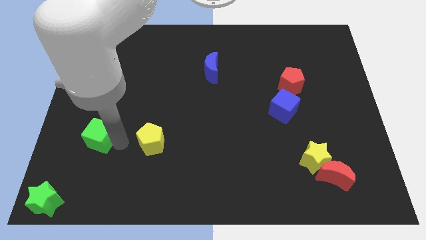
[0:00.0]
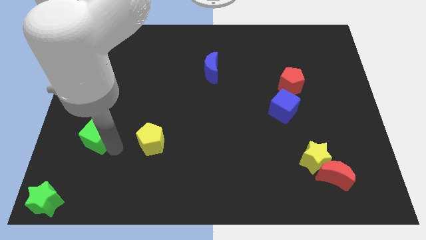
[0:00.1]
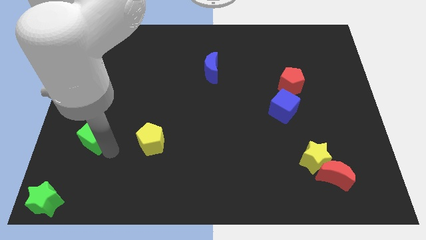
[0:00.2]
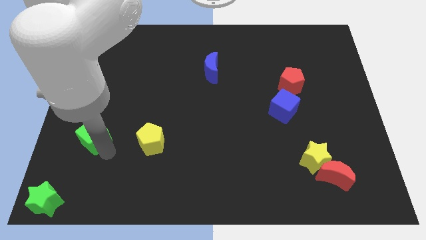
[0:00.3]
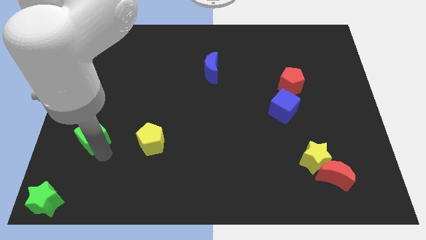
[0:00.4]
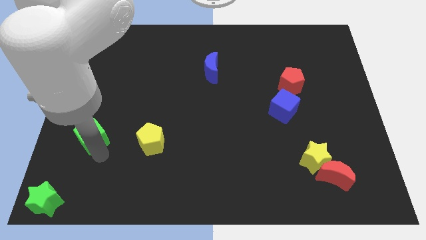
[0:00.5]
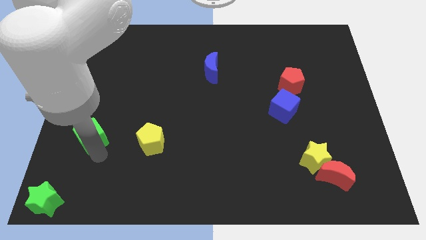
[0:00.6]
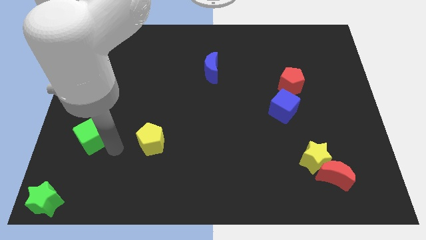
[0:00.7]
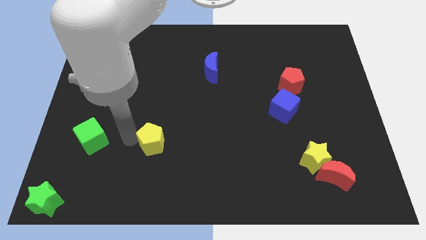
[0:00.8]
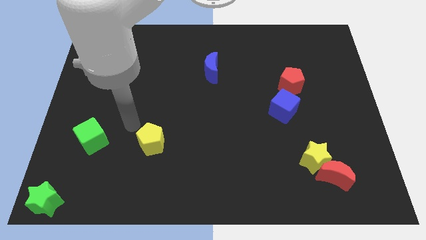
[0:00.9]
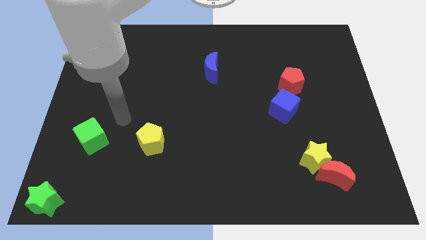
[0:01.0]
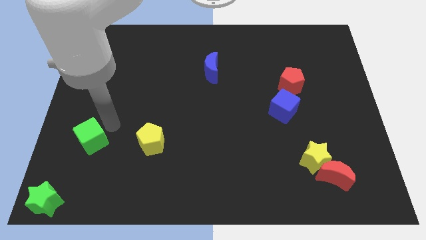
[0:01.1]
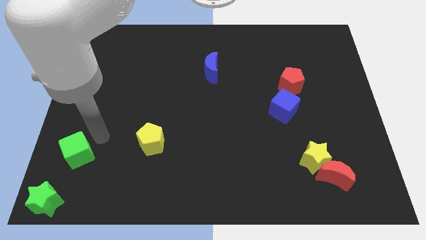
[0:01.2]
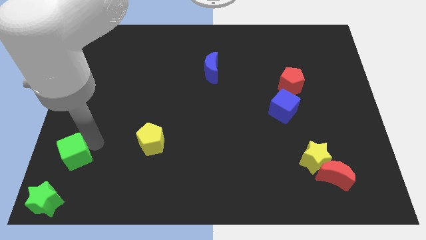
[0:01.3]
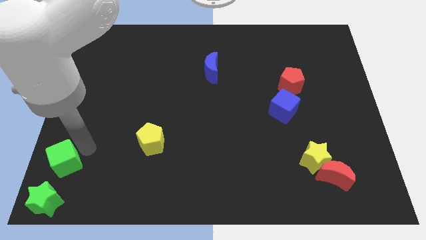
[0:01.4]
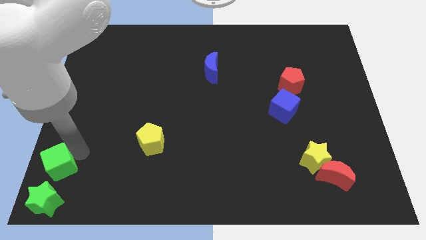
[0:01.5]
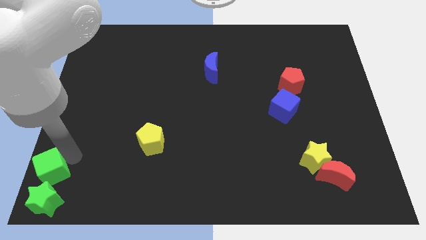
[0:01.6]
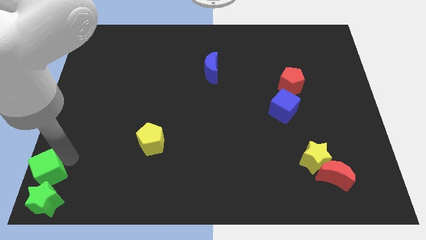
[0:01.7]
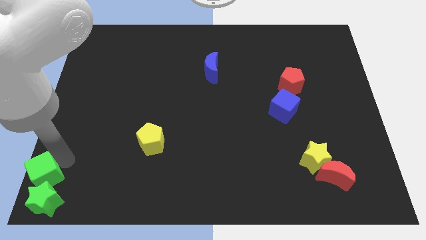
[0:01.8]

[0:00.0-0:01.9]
move the green cube towards the green star

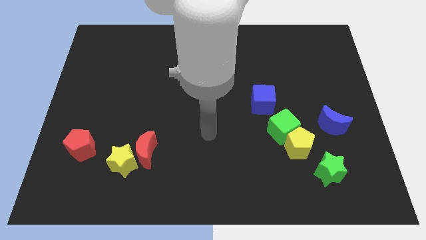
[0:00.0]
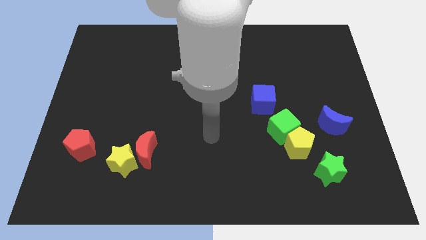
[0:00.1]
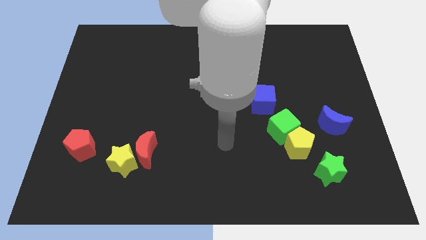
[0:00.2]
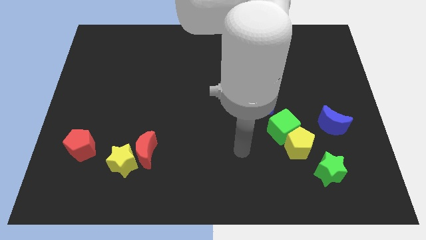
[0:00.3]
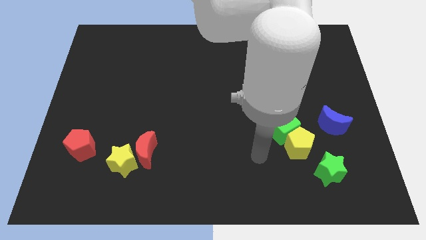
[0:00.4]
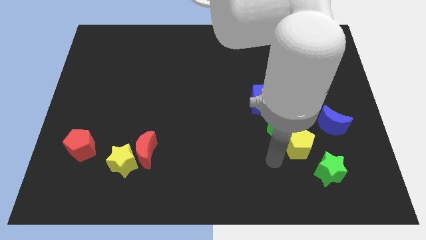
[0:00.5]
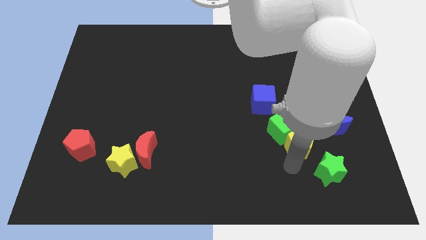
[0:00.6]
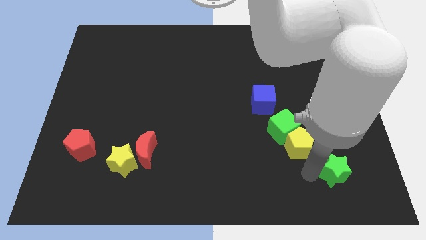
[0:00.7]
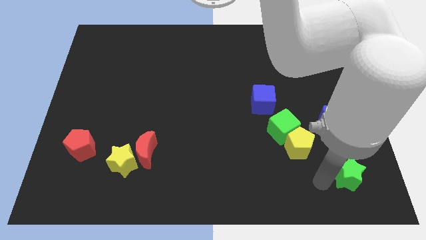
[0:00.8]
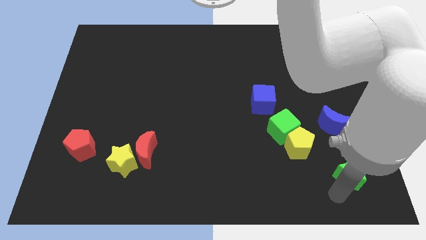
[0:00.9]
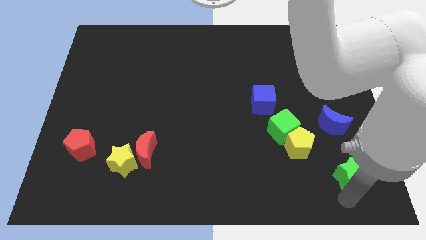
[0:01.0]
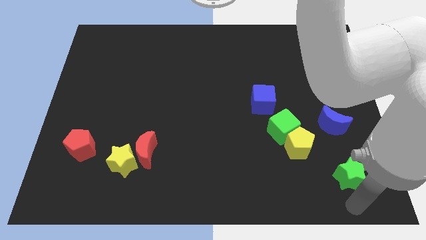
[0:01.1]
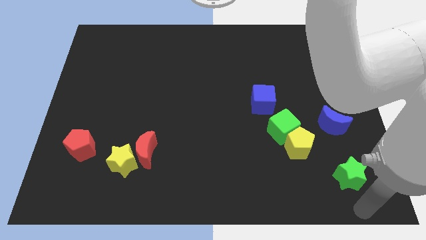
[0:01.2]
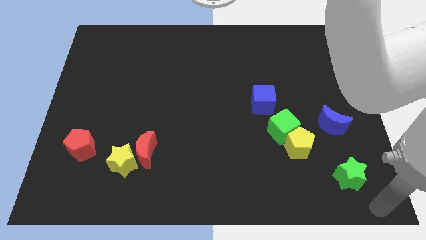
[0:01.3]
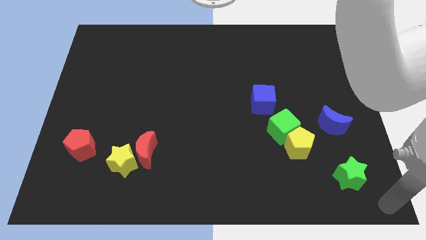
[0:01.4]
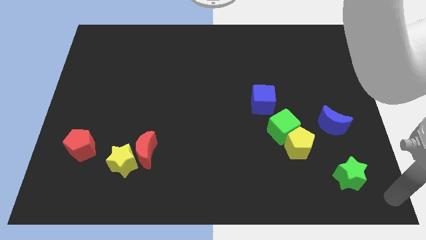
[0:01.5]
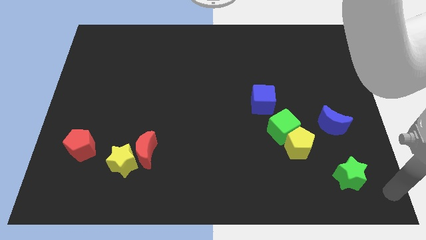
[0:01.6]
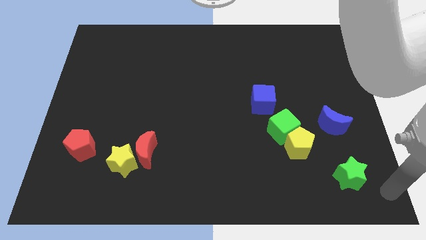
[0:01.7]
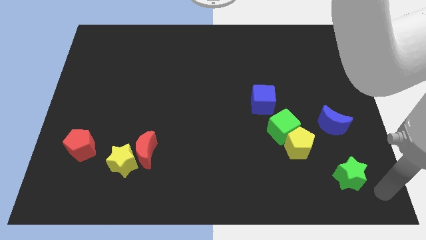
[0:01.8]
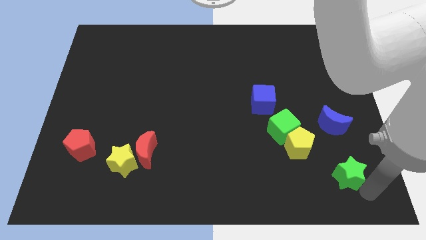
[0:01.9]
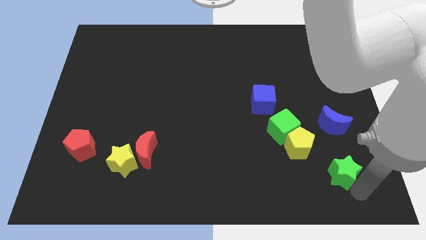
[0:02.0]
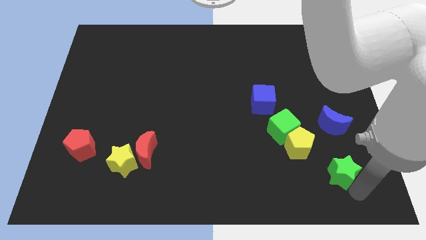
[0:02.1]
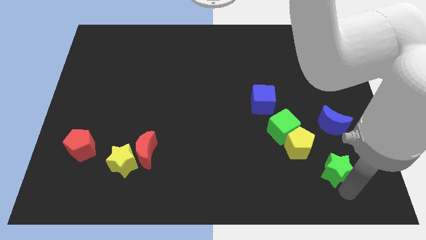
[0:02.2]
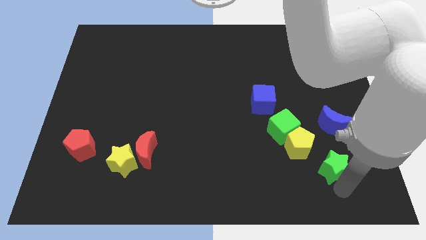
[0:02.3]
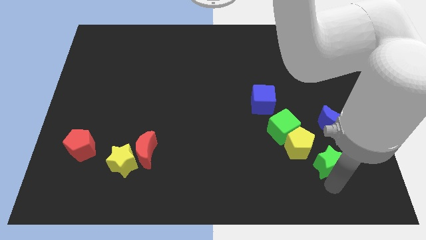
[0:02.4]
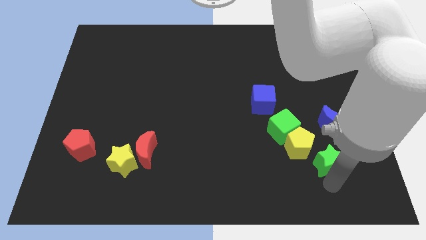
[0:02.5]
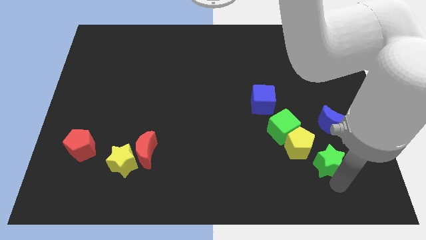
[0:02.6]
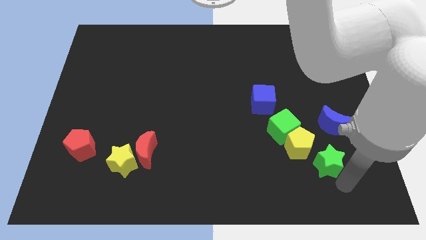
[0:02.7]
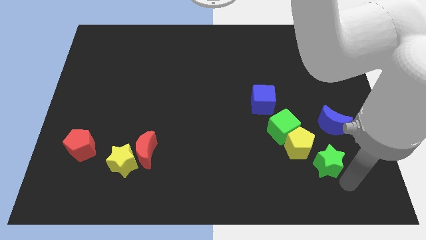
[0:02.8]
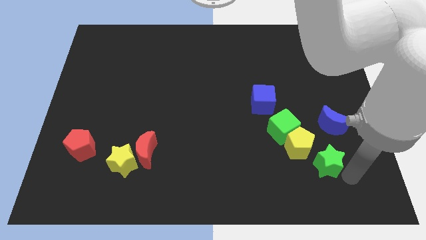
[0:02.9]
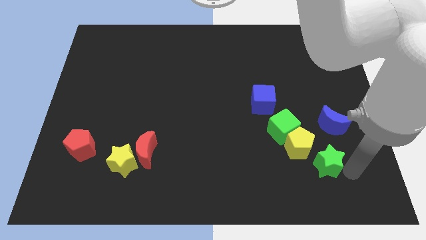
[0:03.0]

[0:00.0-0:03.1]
move green star towards yellow pentagon

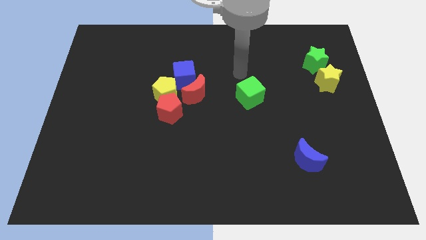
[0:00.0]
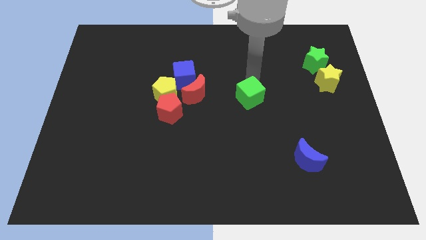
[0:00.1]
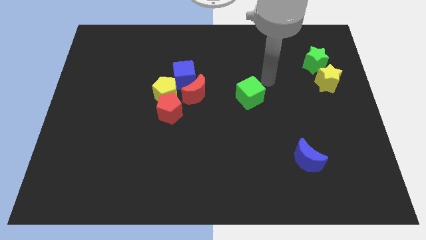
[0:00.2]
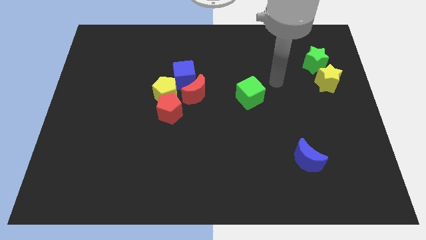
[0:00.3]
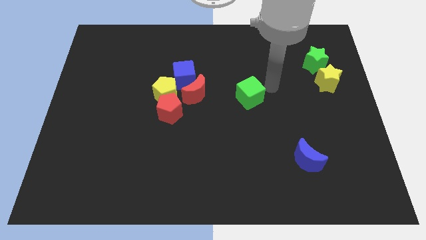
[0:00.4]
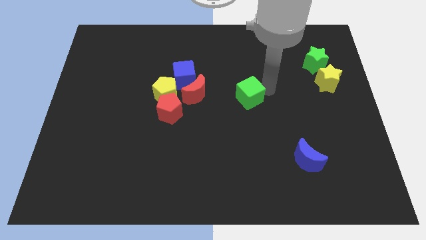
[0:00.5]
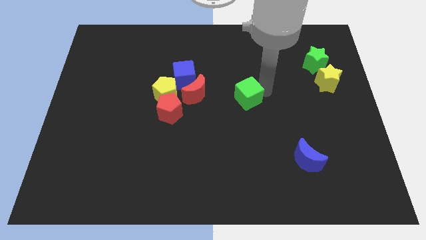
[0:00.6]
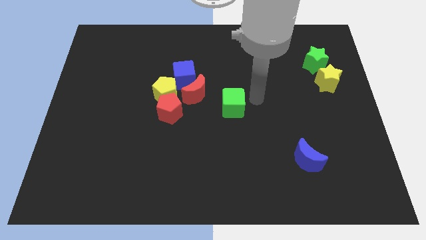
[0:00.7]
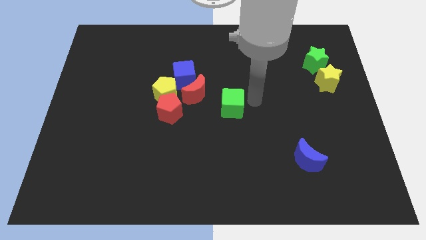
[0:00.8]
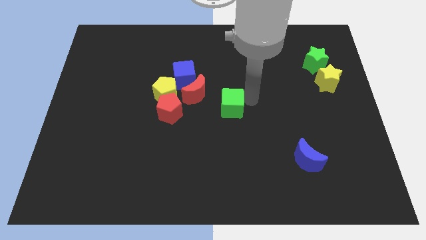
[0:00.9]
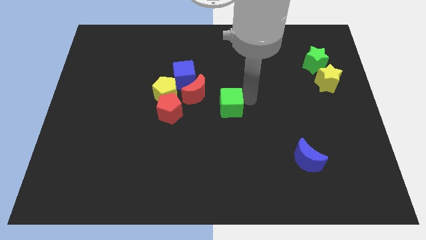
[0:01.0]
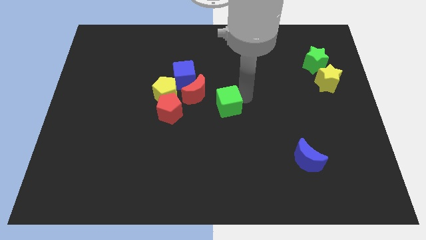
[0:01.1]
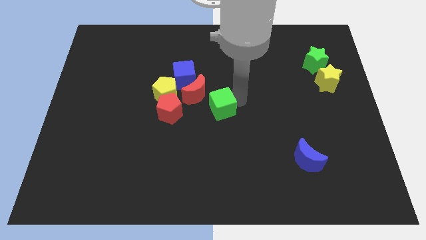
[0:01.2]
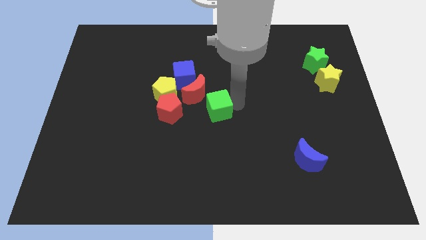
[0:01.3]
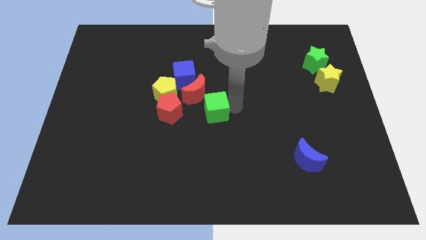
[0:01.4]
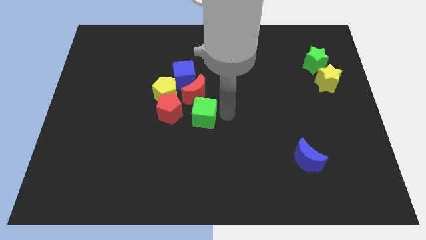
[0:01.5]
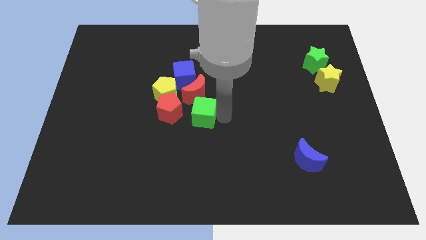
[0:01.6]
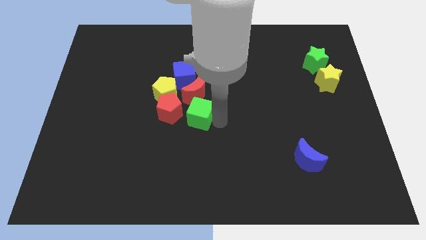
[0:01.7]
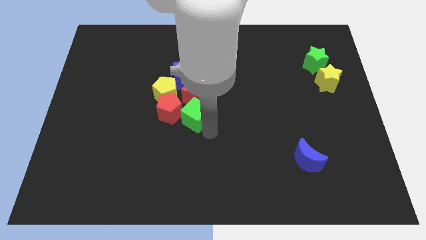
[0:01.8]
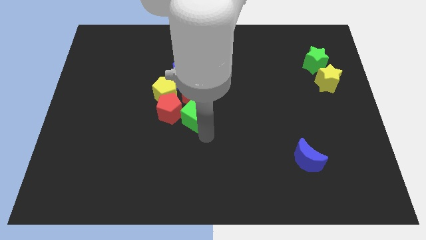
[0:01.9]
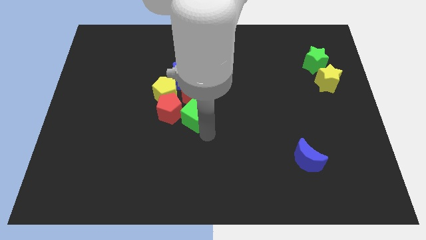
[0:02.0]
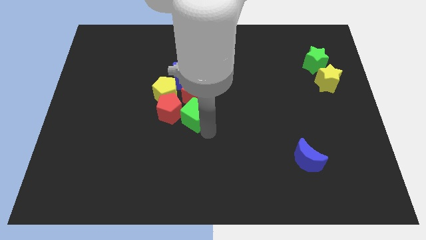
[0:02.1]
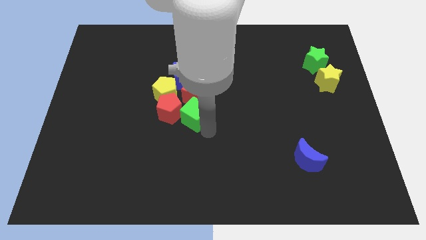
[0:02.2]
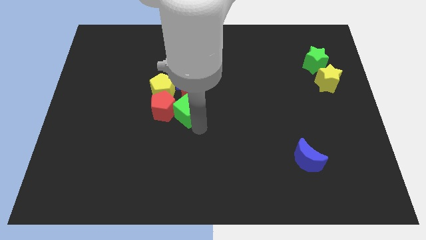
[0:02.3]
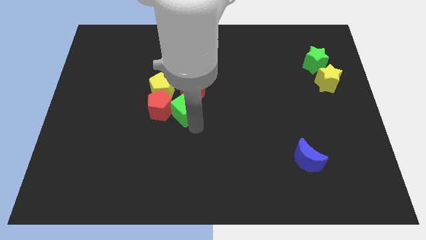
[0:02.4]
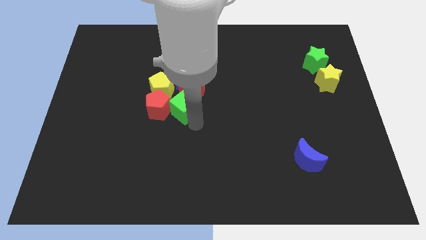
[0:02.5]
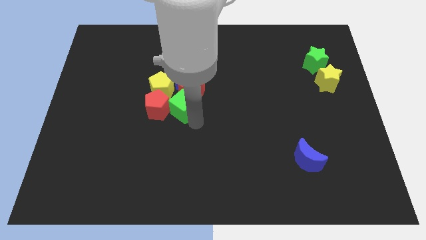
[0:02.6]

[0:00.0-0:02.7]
push the green cube into the red pentagon

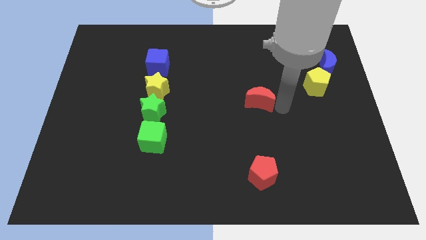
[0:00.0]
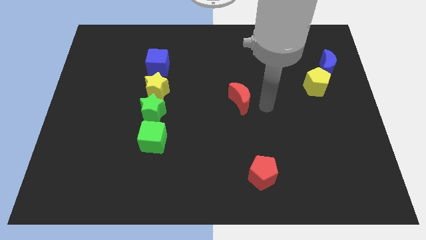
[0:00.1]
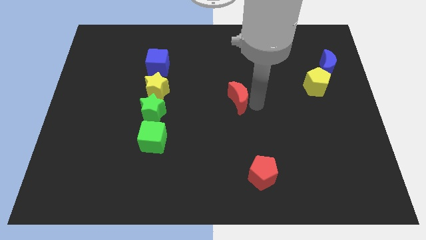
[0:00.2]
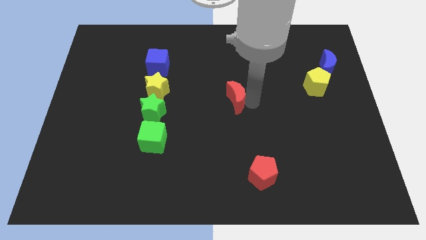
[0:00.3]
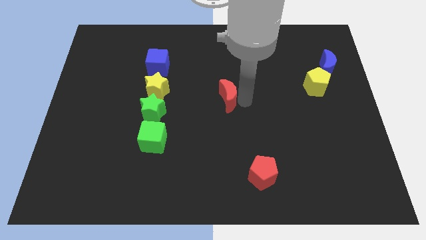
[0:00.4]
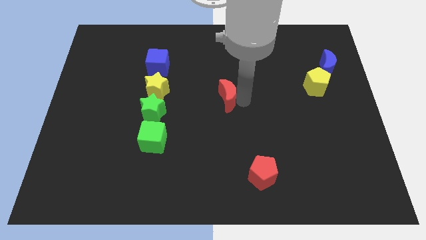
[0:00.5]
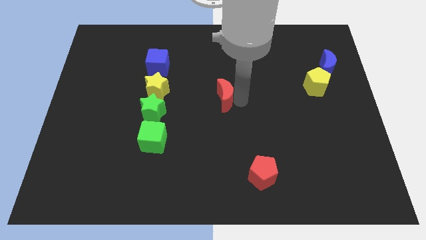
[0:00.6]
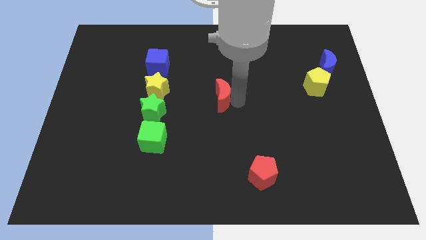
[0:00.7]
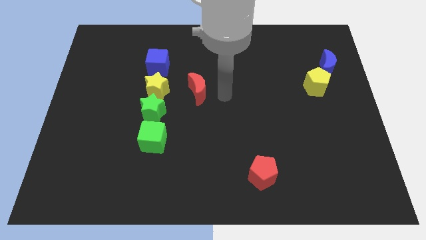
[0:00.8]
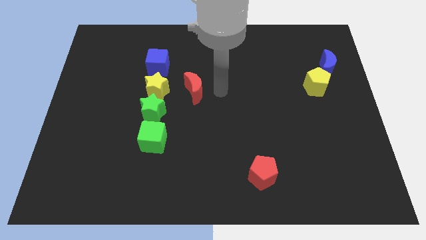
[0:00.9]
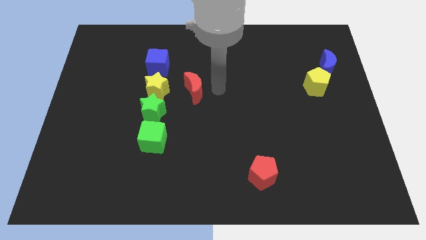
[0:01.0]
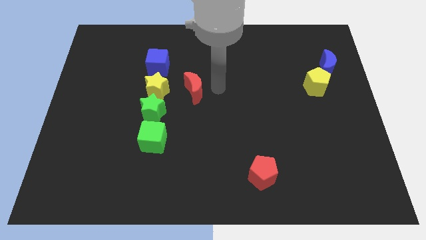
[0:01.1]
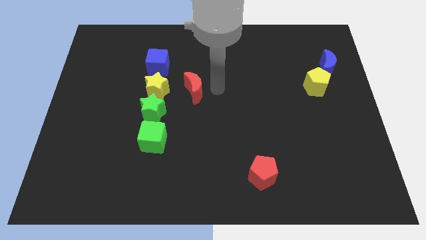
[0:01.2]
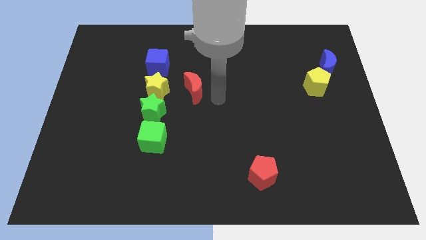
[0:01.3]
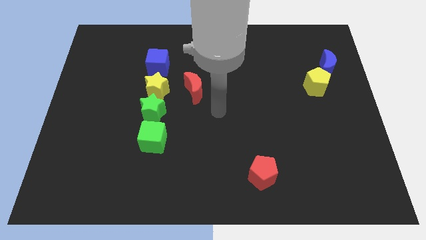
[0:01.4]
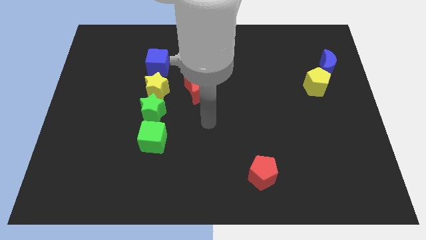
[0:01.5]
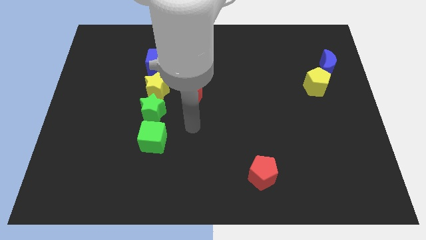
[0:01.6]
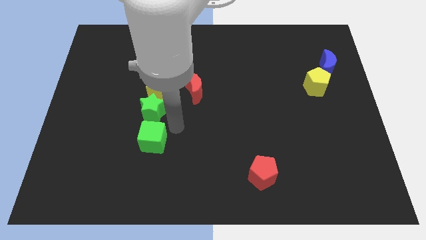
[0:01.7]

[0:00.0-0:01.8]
push the red moon towards yellow star
